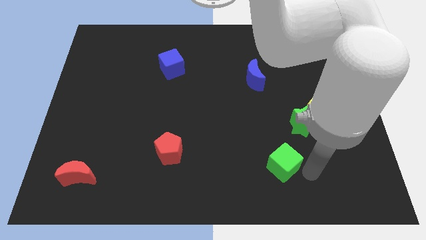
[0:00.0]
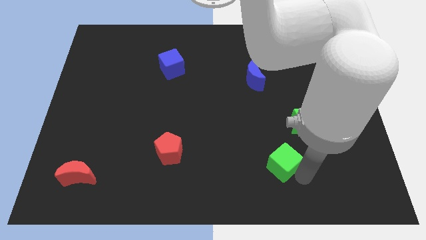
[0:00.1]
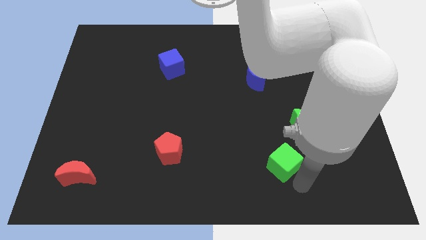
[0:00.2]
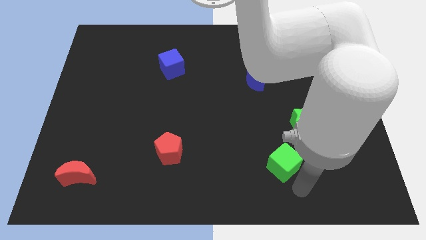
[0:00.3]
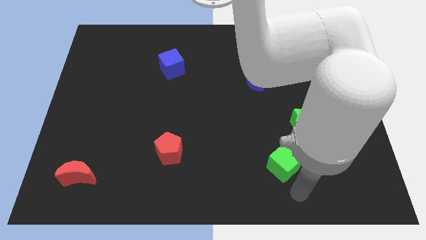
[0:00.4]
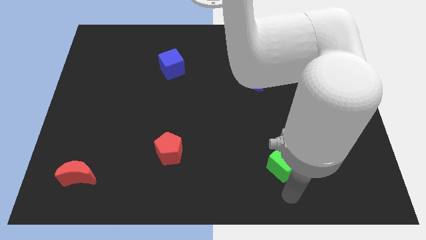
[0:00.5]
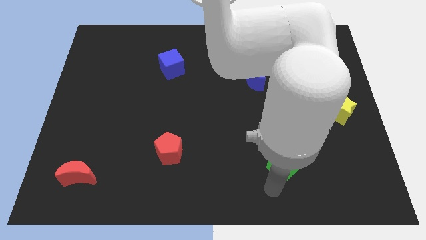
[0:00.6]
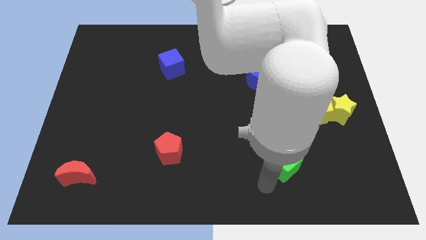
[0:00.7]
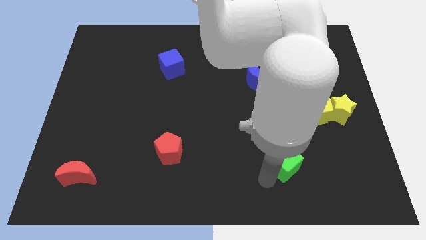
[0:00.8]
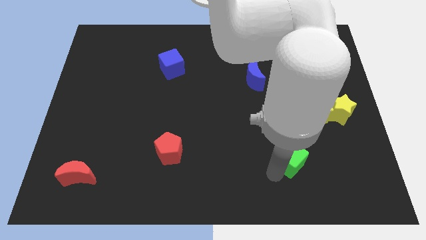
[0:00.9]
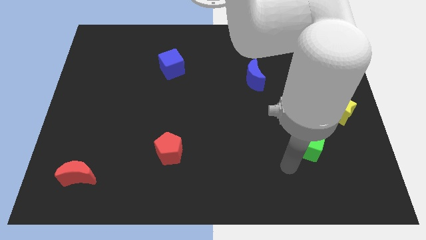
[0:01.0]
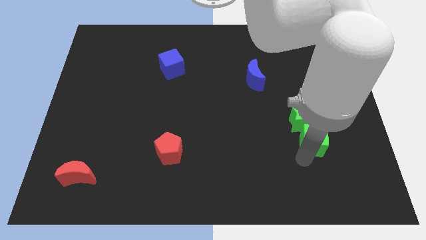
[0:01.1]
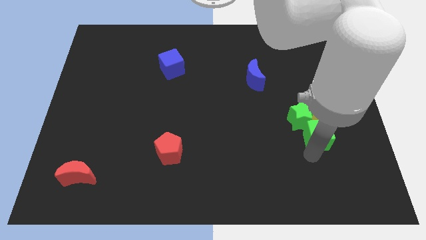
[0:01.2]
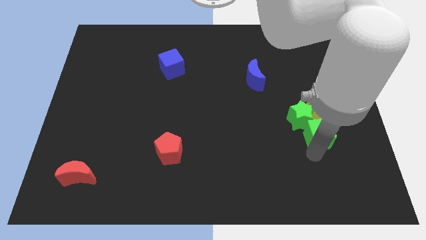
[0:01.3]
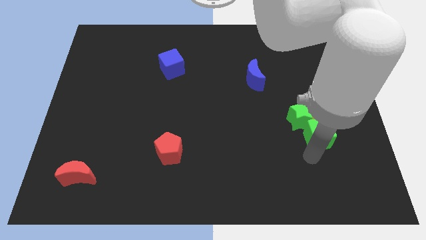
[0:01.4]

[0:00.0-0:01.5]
put green cube below the green star

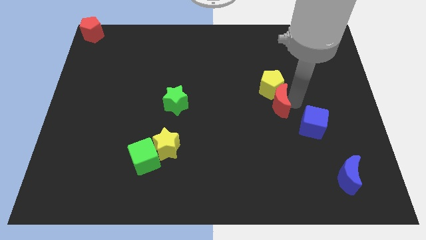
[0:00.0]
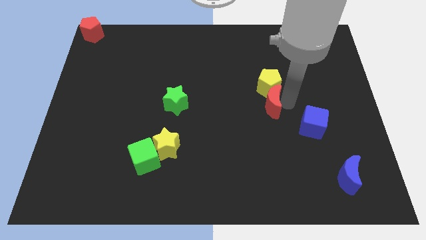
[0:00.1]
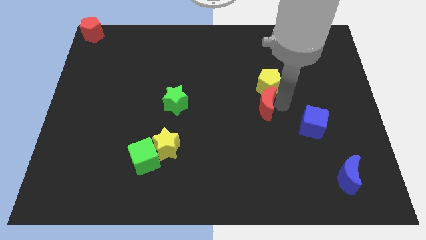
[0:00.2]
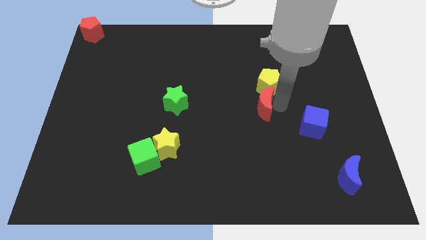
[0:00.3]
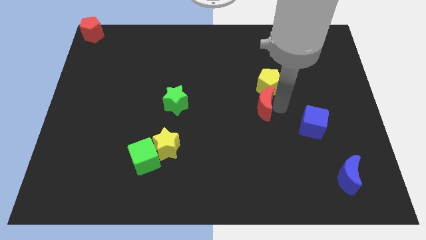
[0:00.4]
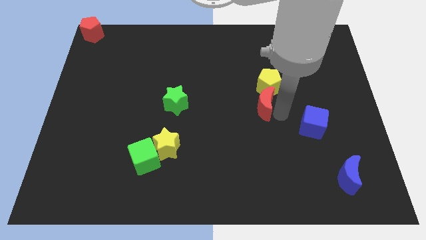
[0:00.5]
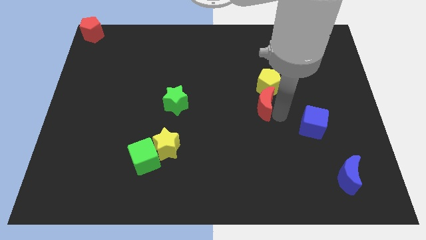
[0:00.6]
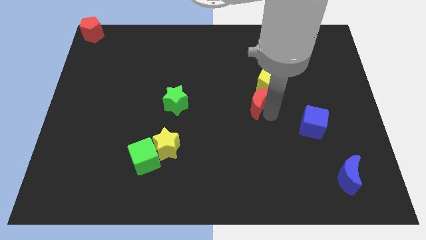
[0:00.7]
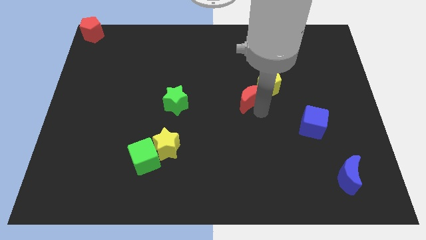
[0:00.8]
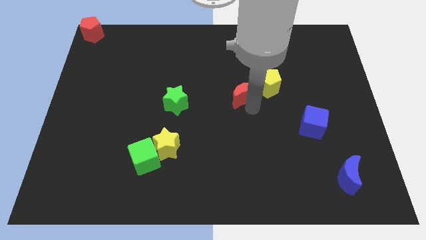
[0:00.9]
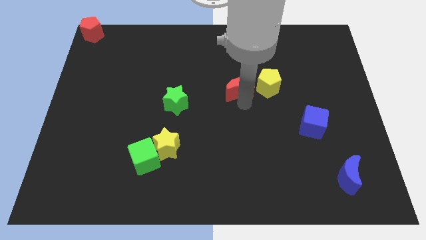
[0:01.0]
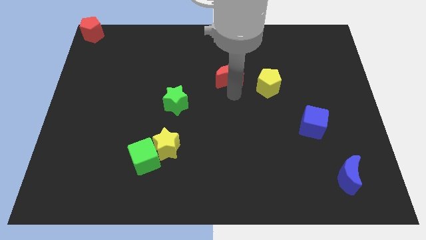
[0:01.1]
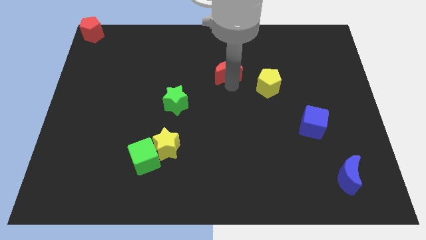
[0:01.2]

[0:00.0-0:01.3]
place red moon to the left of yellow pentagon

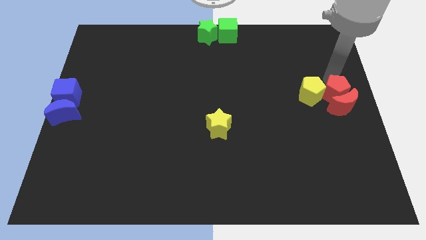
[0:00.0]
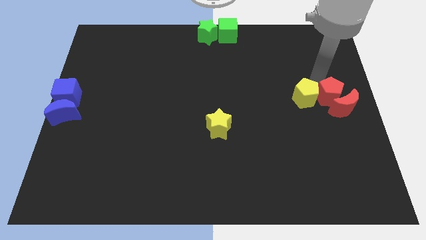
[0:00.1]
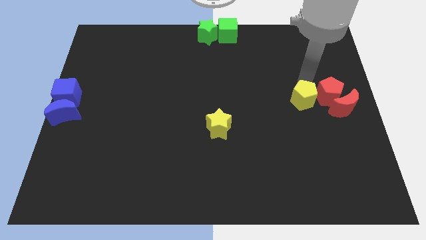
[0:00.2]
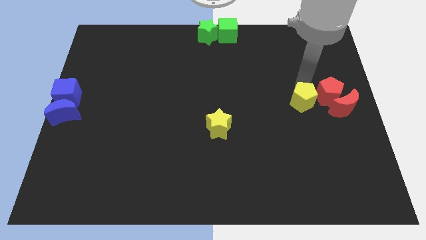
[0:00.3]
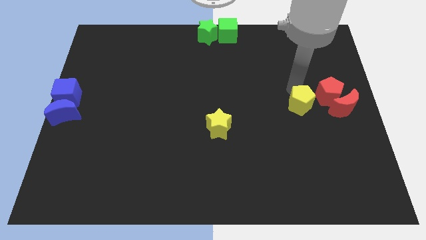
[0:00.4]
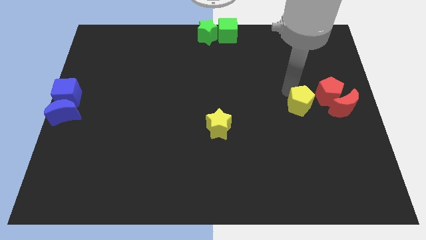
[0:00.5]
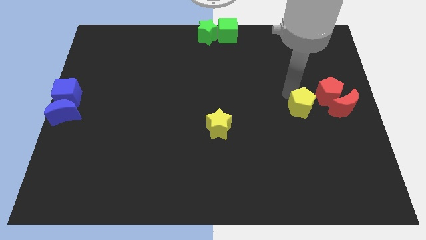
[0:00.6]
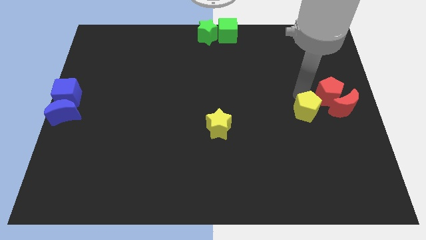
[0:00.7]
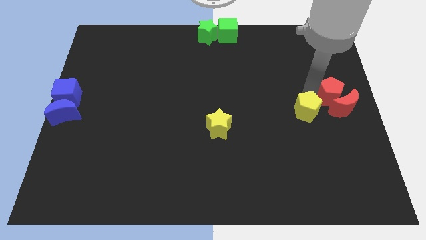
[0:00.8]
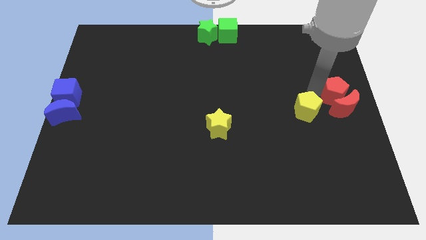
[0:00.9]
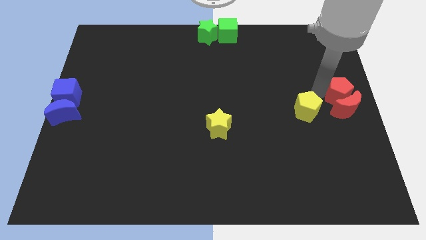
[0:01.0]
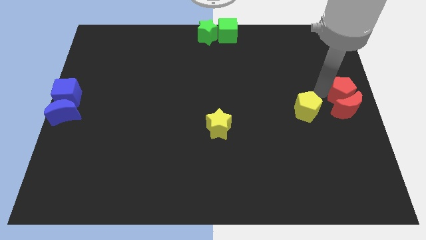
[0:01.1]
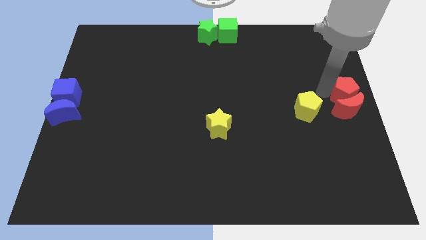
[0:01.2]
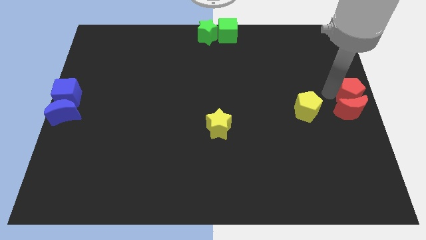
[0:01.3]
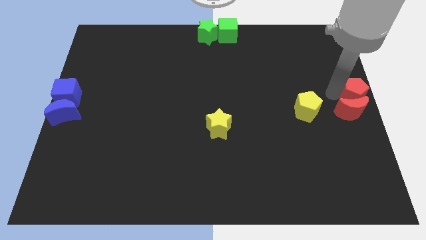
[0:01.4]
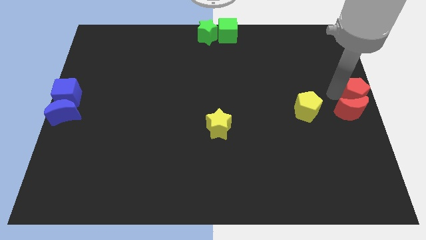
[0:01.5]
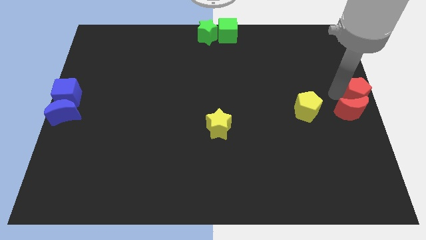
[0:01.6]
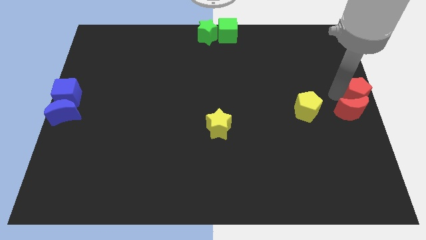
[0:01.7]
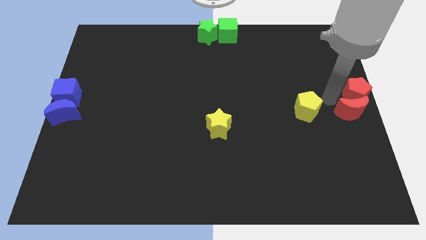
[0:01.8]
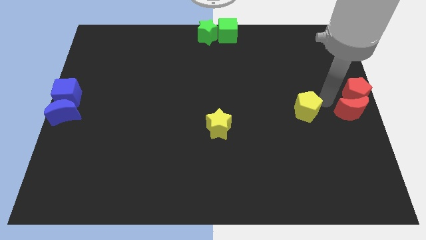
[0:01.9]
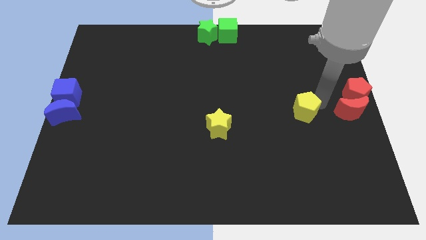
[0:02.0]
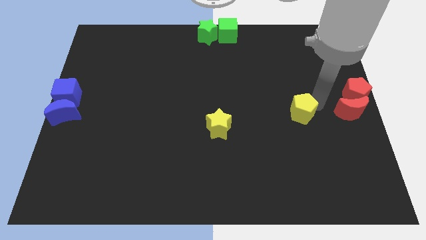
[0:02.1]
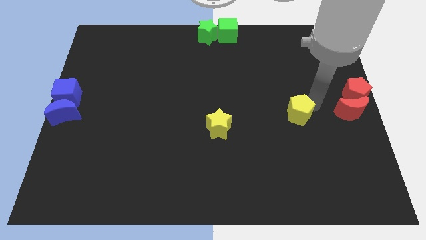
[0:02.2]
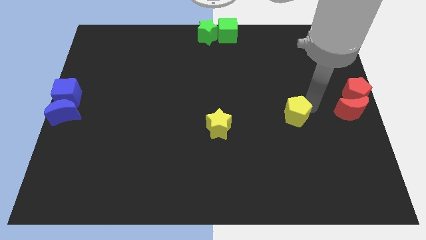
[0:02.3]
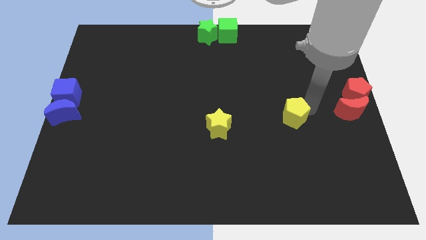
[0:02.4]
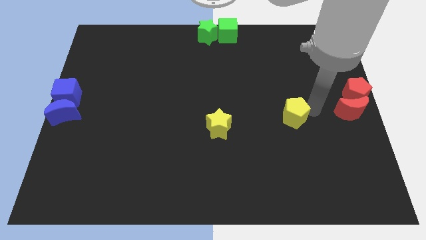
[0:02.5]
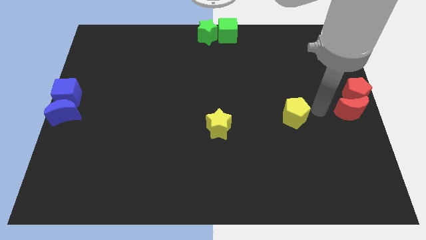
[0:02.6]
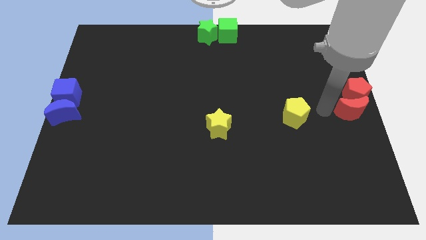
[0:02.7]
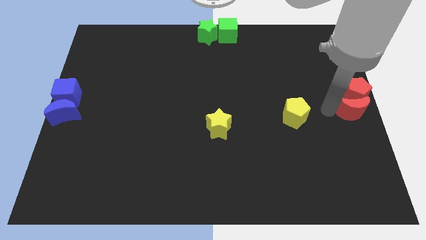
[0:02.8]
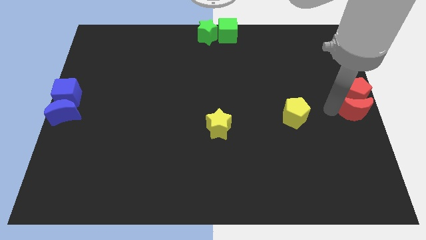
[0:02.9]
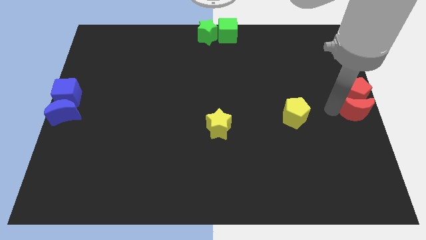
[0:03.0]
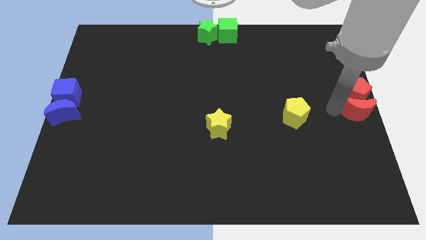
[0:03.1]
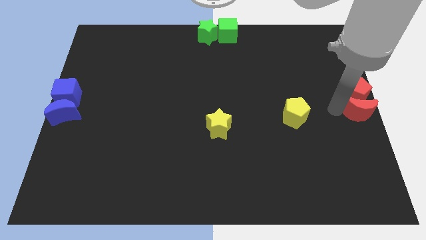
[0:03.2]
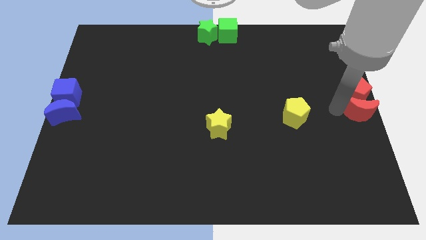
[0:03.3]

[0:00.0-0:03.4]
place the red blocks at right center of the board

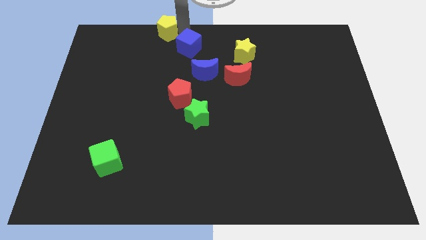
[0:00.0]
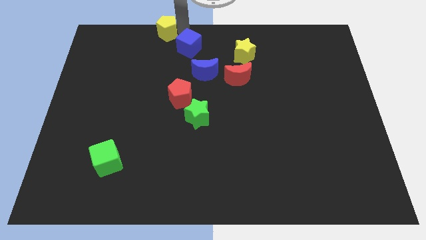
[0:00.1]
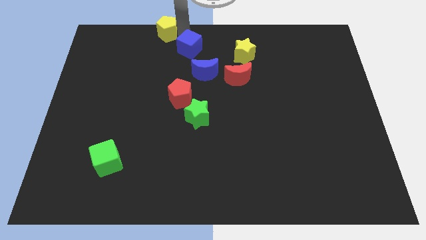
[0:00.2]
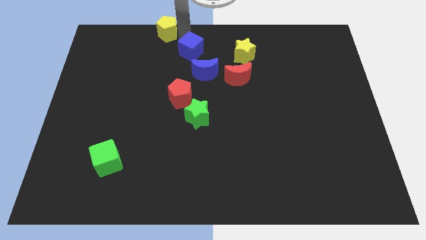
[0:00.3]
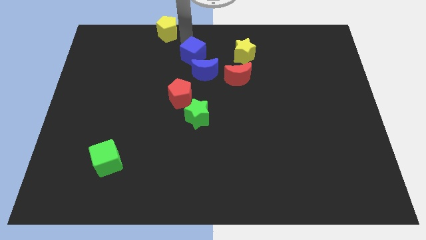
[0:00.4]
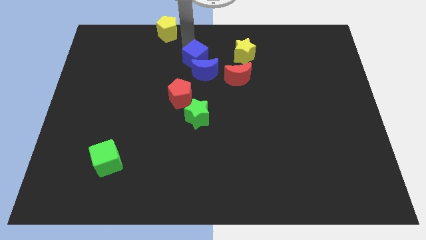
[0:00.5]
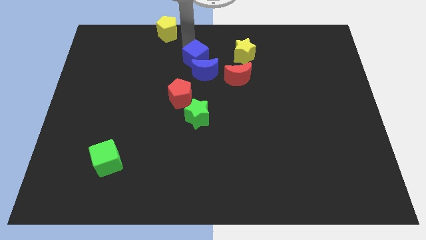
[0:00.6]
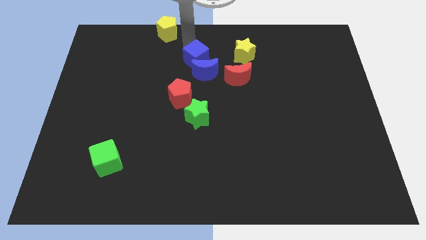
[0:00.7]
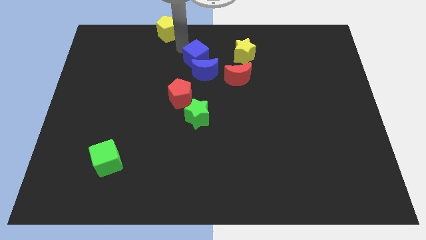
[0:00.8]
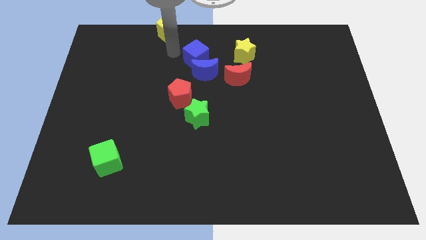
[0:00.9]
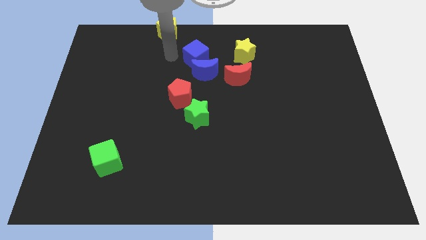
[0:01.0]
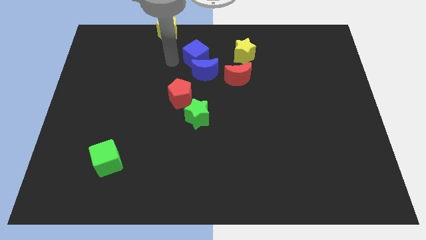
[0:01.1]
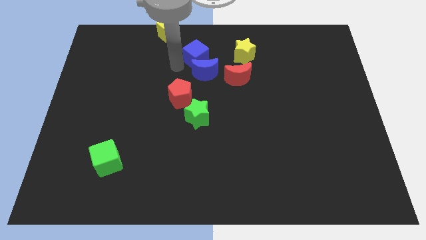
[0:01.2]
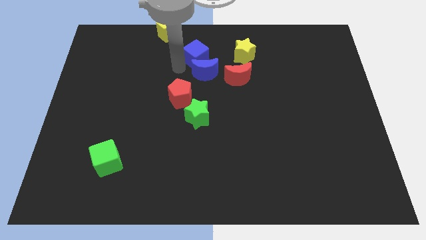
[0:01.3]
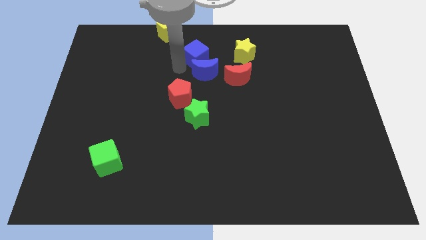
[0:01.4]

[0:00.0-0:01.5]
drag the blue moon slightly downwards

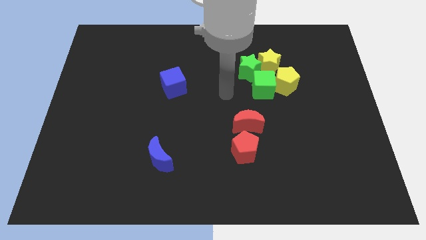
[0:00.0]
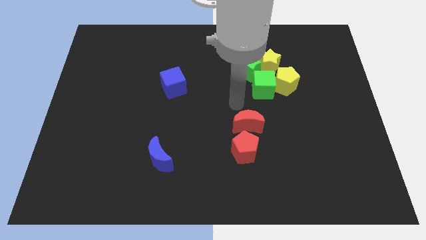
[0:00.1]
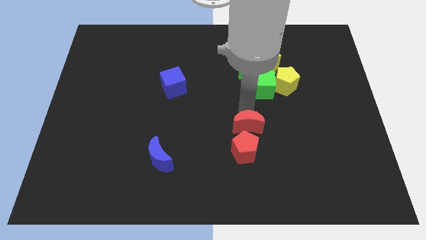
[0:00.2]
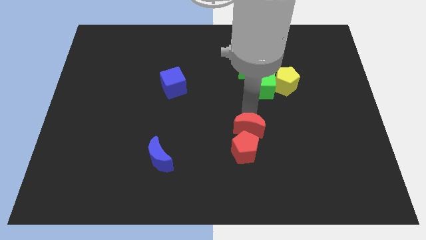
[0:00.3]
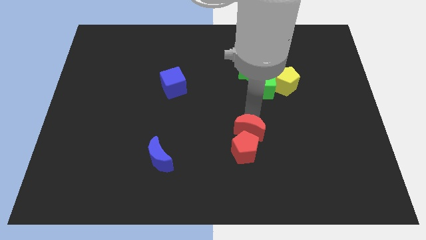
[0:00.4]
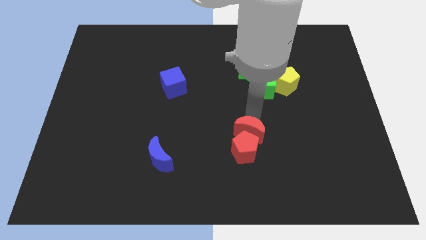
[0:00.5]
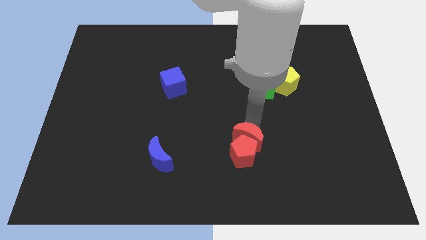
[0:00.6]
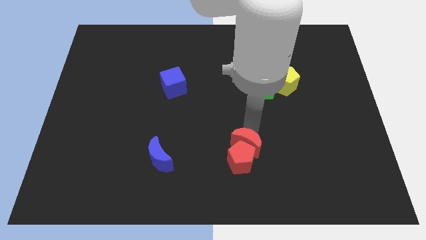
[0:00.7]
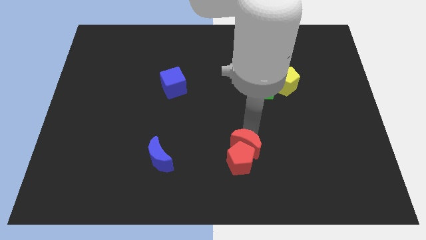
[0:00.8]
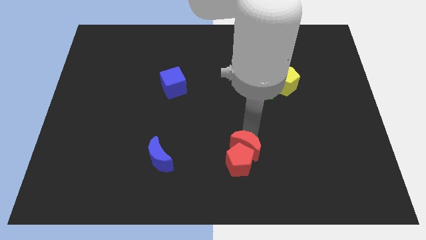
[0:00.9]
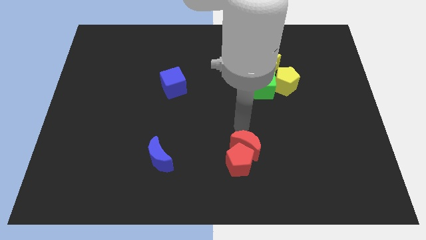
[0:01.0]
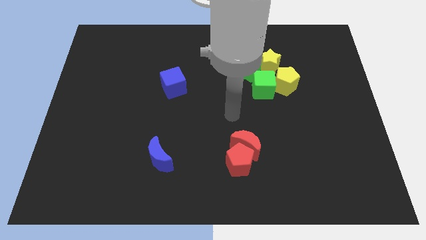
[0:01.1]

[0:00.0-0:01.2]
push the red crescent above the red pentagon

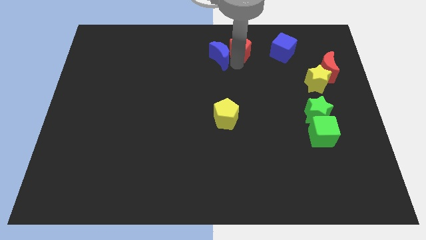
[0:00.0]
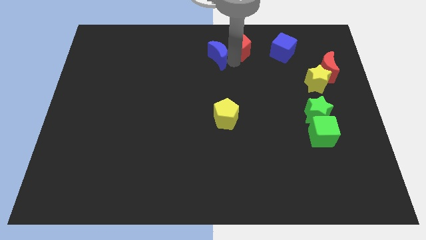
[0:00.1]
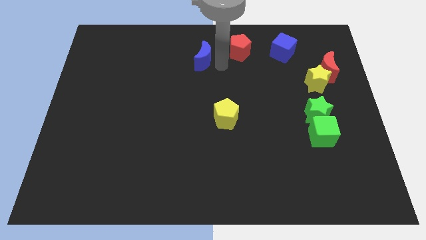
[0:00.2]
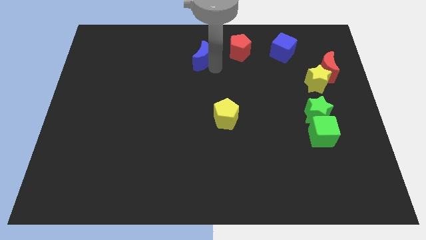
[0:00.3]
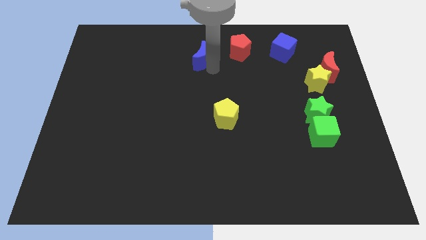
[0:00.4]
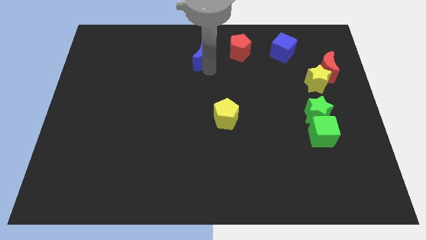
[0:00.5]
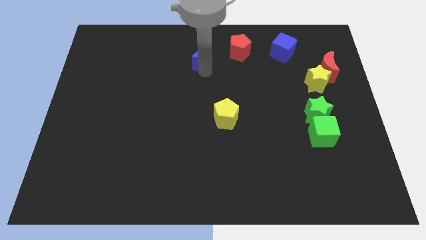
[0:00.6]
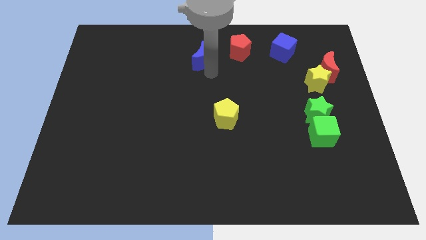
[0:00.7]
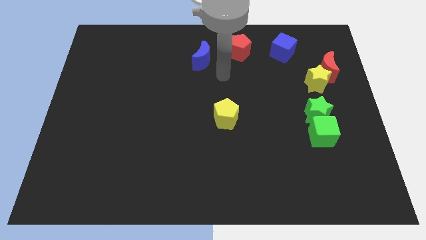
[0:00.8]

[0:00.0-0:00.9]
separate the blue crescent from red pentagon
